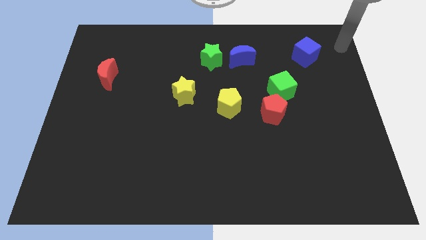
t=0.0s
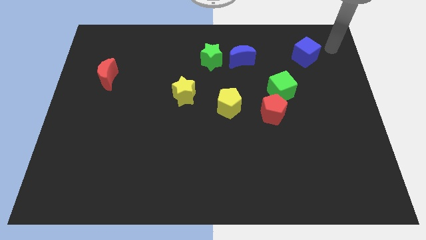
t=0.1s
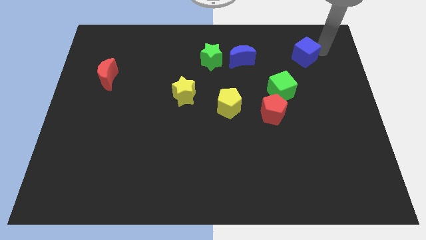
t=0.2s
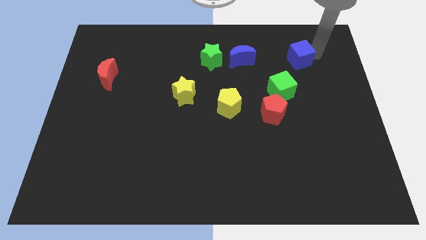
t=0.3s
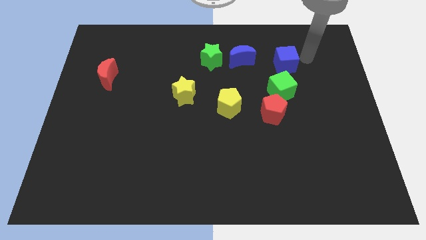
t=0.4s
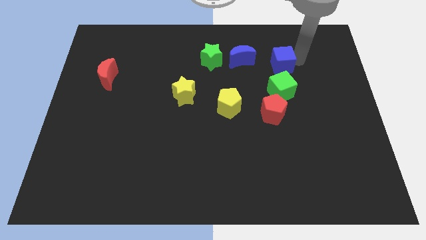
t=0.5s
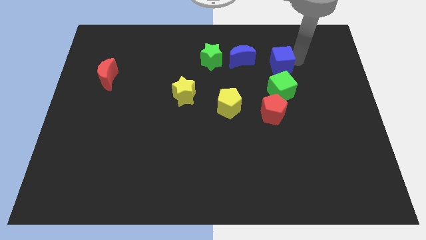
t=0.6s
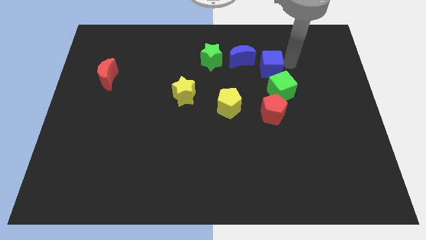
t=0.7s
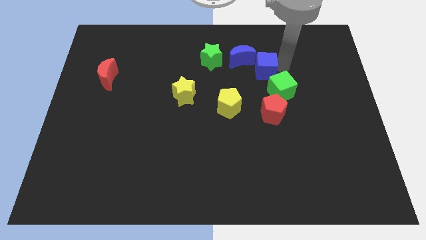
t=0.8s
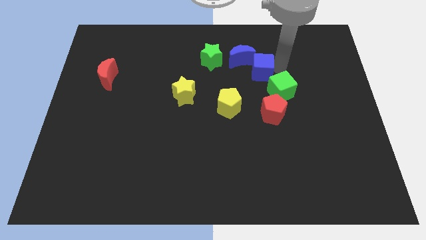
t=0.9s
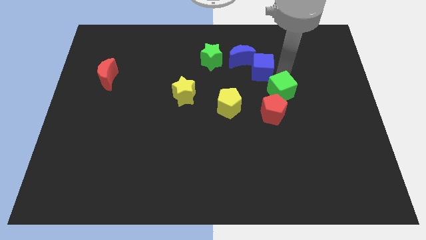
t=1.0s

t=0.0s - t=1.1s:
slightly move blue block towards the left

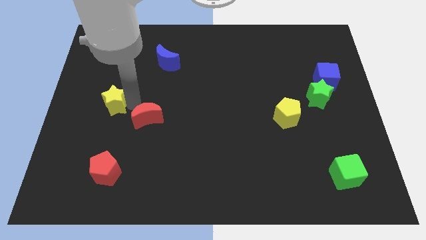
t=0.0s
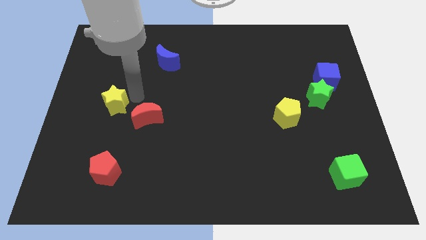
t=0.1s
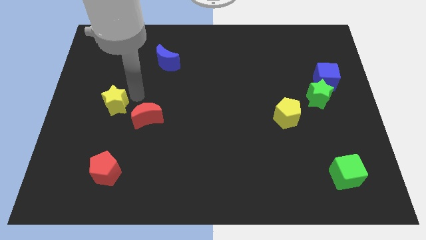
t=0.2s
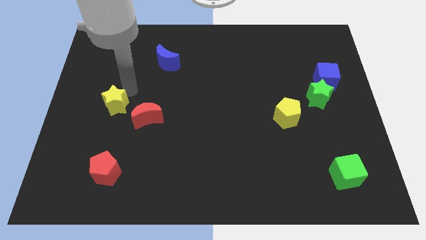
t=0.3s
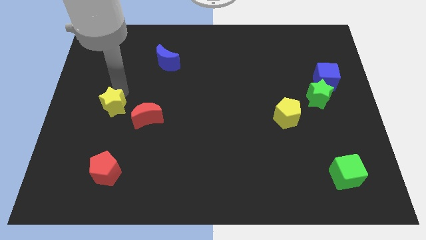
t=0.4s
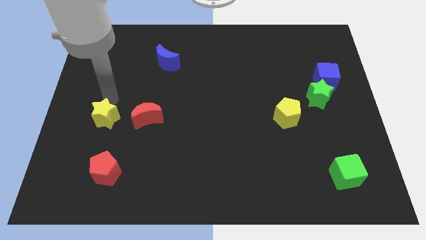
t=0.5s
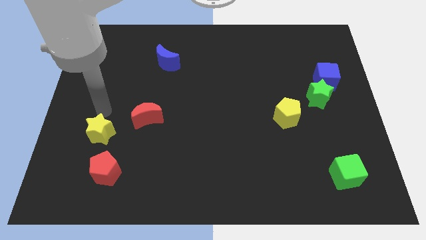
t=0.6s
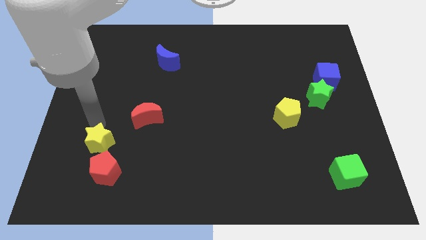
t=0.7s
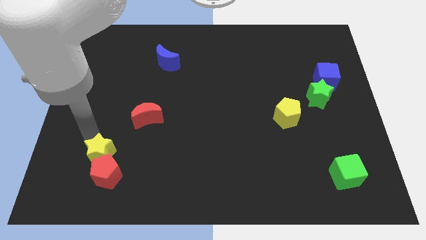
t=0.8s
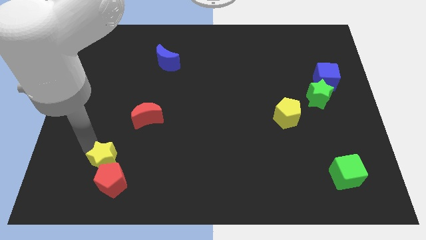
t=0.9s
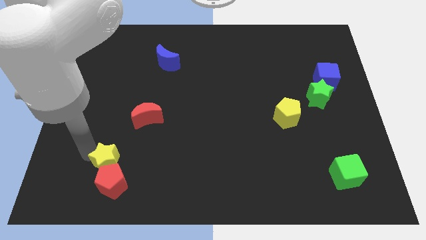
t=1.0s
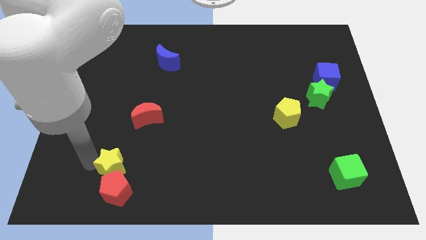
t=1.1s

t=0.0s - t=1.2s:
move the yellow star into the red pentagon

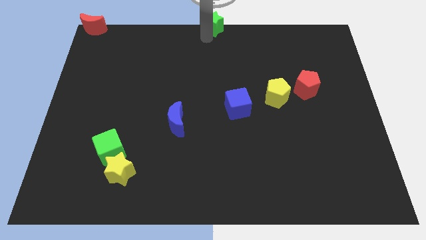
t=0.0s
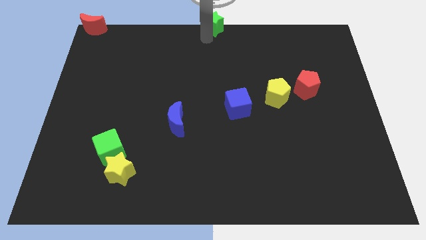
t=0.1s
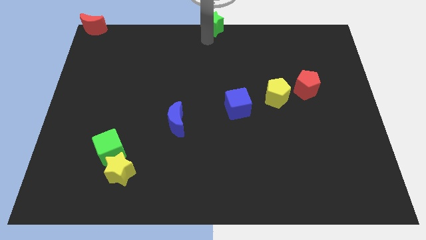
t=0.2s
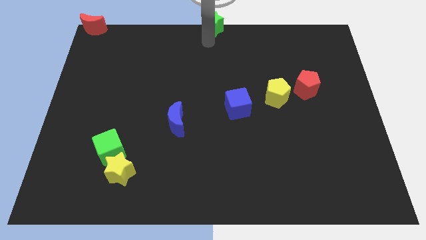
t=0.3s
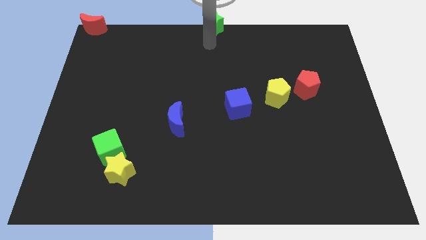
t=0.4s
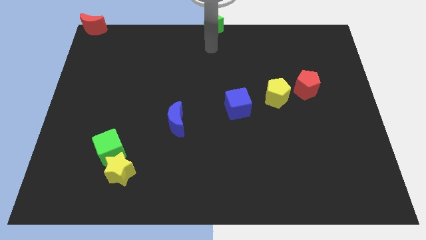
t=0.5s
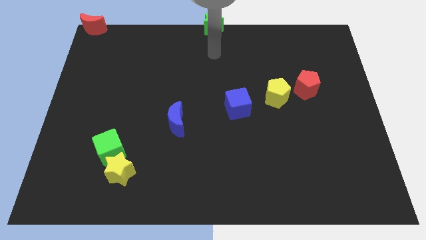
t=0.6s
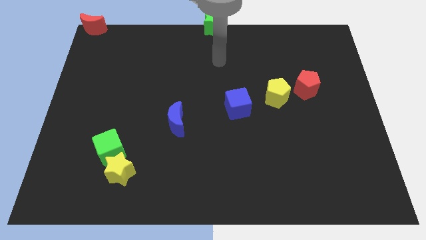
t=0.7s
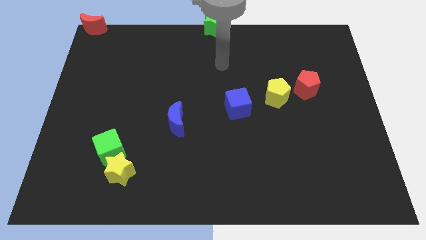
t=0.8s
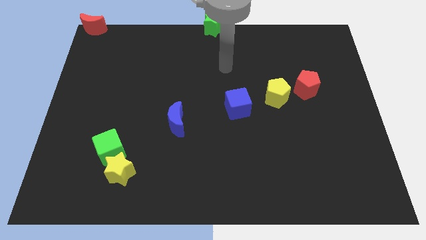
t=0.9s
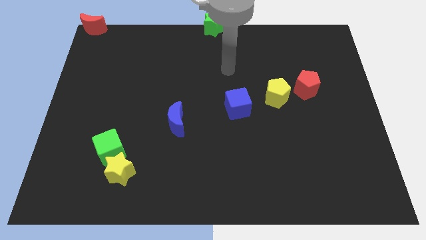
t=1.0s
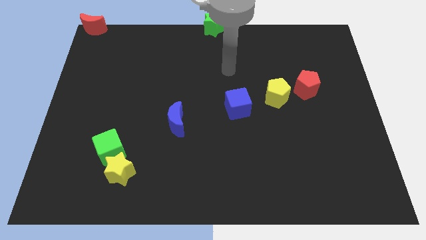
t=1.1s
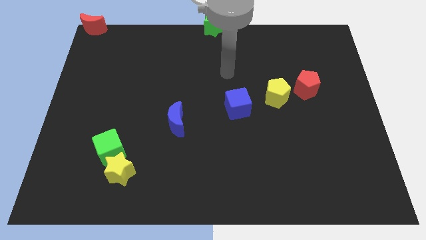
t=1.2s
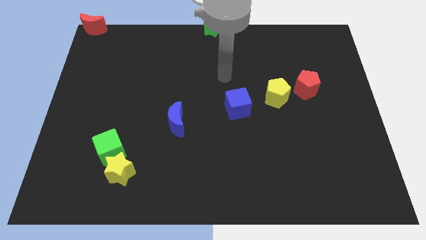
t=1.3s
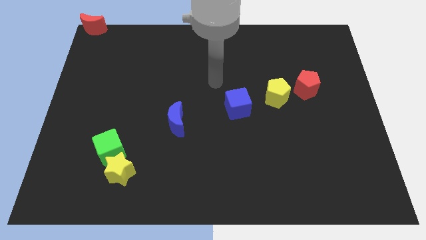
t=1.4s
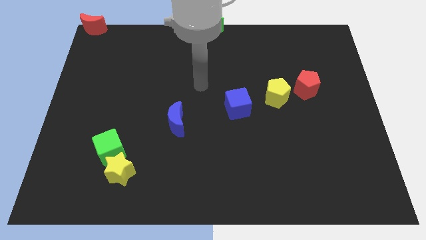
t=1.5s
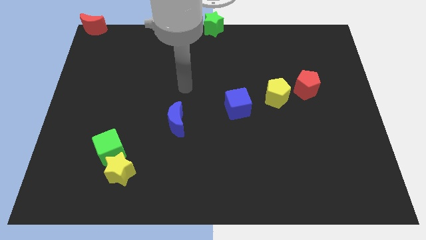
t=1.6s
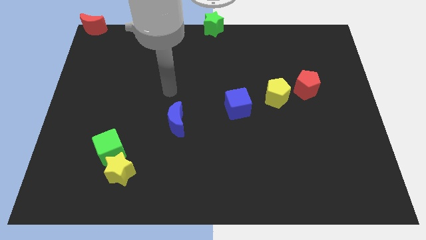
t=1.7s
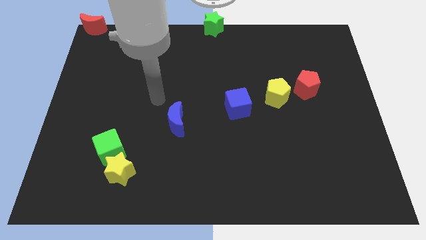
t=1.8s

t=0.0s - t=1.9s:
move the arm away from the green star

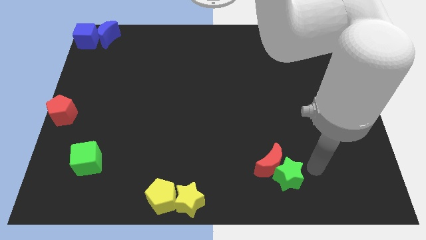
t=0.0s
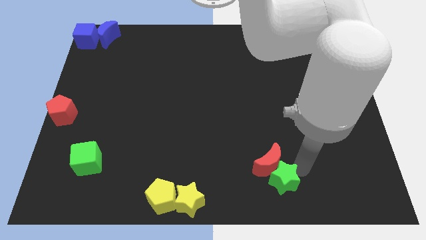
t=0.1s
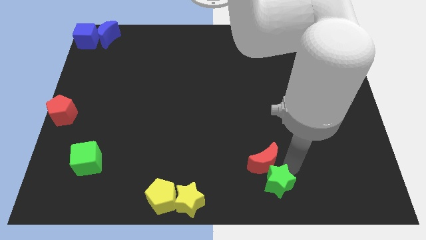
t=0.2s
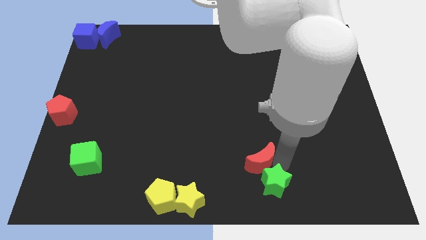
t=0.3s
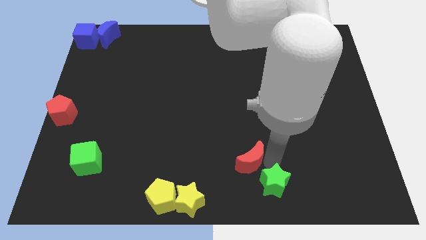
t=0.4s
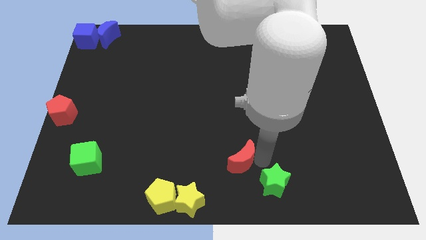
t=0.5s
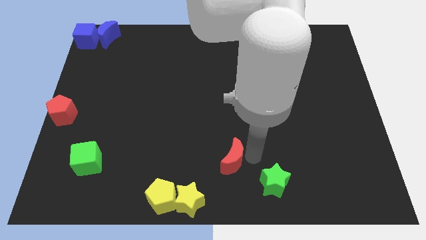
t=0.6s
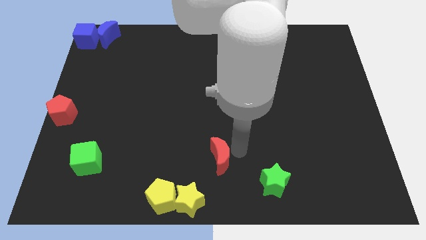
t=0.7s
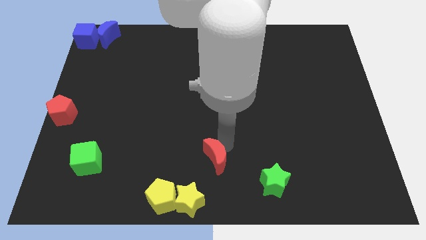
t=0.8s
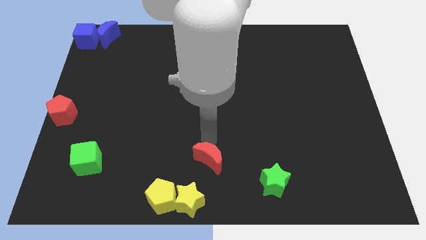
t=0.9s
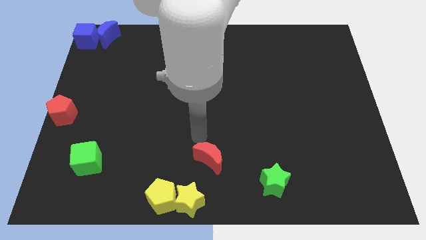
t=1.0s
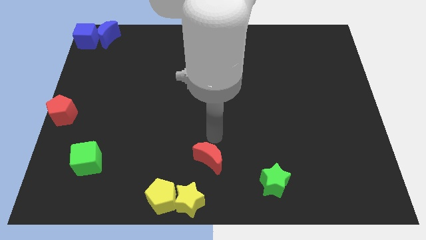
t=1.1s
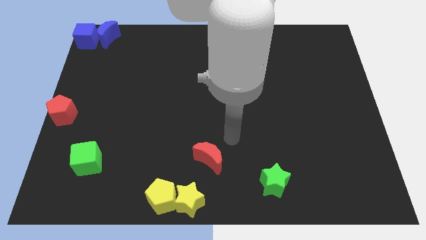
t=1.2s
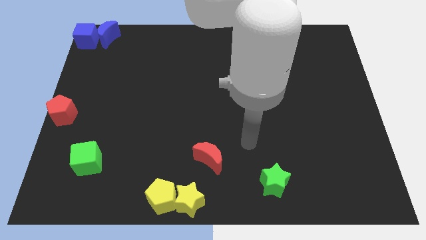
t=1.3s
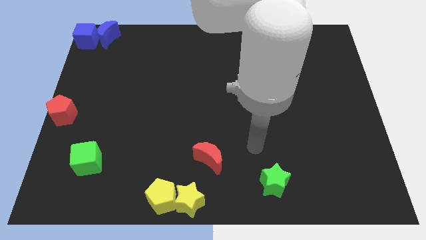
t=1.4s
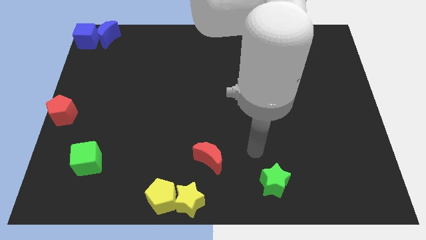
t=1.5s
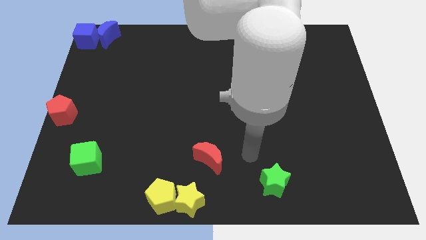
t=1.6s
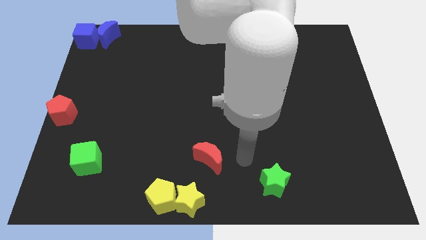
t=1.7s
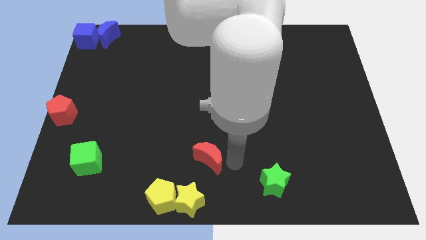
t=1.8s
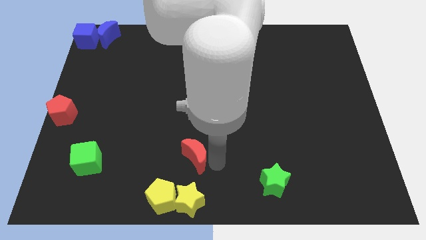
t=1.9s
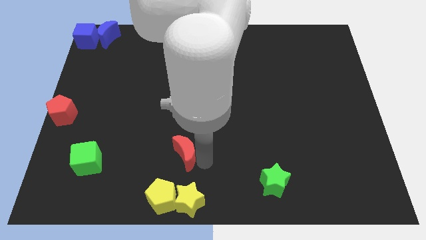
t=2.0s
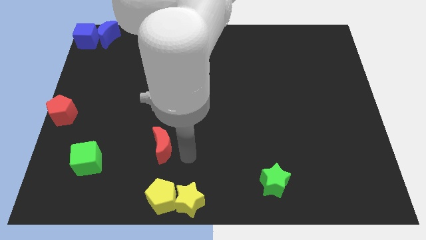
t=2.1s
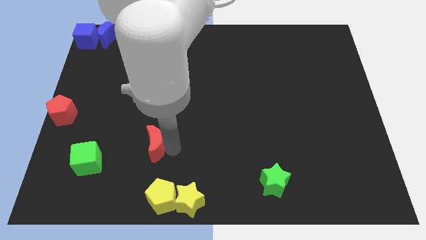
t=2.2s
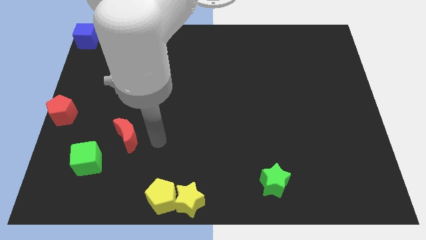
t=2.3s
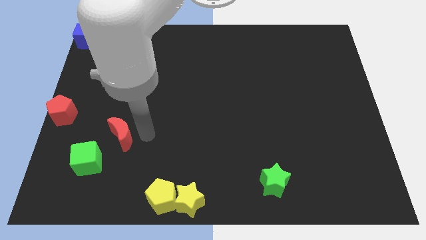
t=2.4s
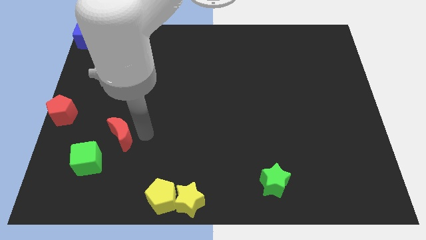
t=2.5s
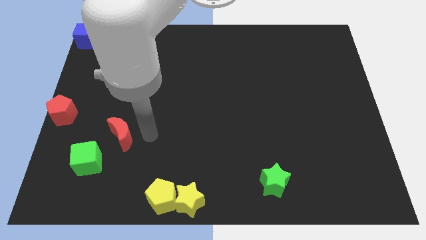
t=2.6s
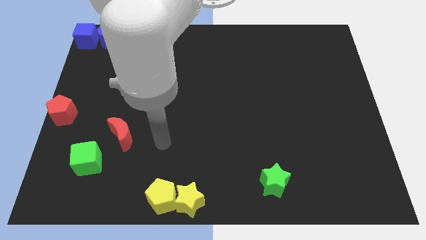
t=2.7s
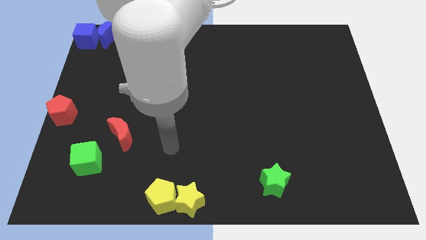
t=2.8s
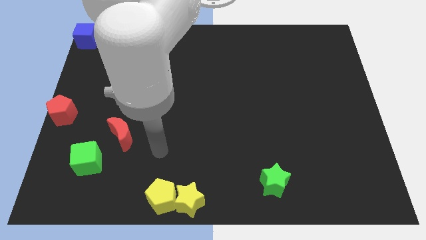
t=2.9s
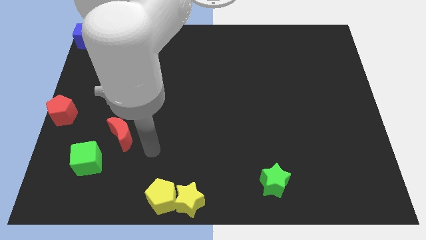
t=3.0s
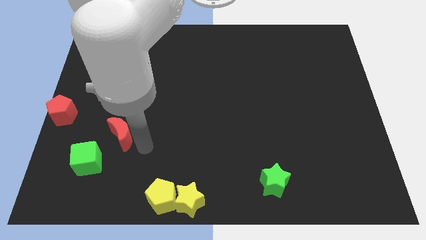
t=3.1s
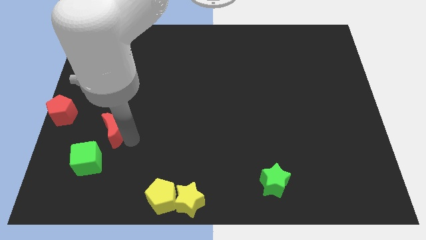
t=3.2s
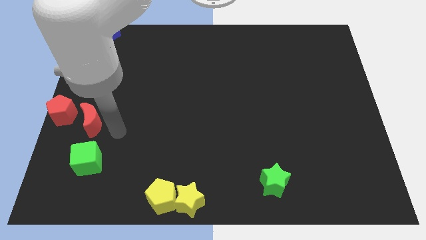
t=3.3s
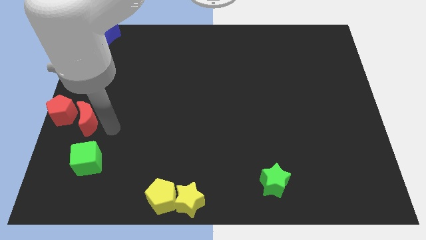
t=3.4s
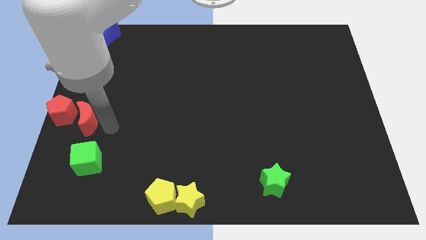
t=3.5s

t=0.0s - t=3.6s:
place the red moon vertically above the green cube

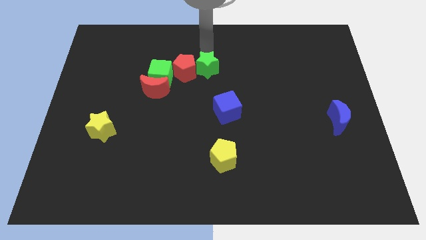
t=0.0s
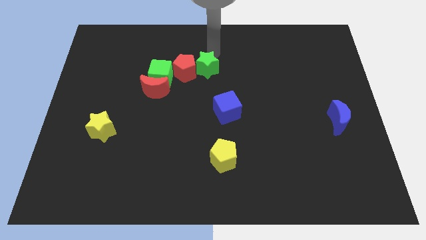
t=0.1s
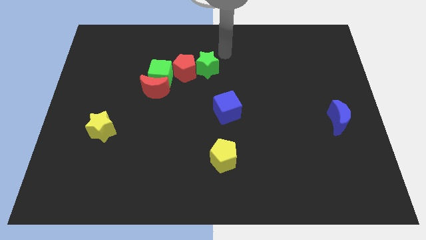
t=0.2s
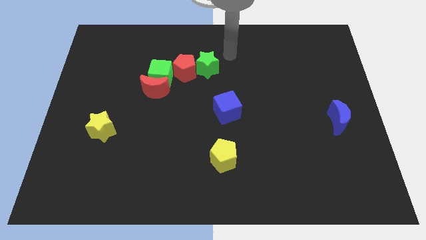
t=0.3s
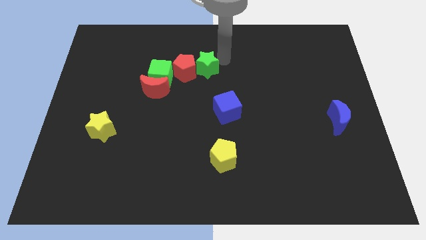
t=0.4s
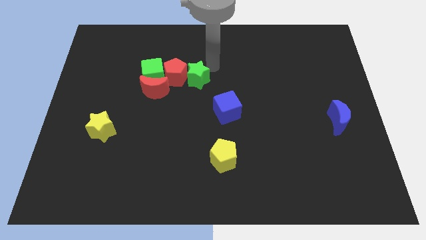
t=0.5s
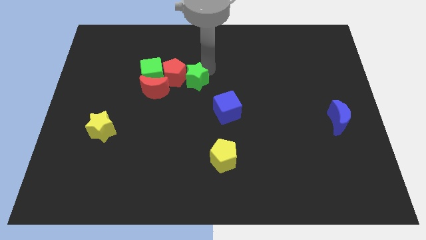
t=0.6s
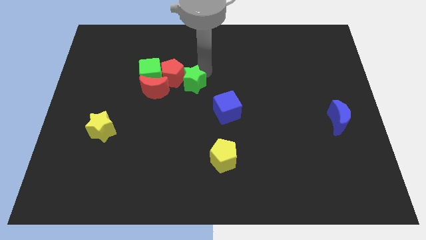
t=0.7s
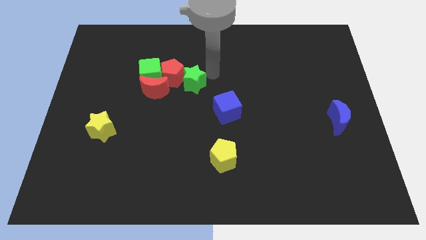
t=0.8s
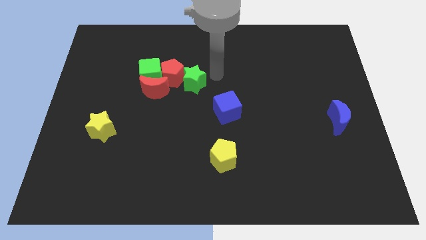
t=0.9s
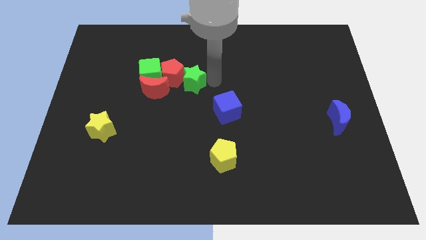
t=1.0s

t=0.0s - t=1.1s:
push the green star into the group of blocks
